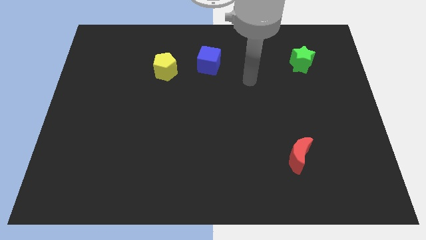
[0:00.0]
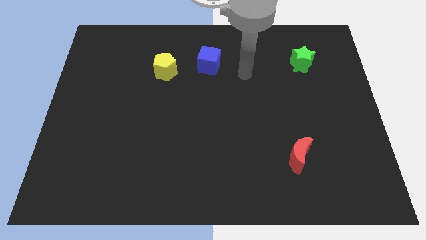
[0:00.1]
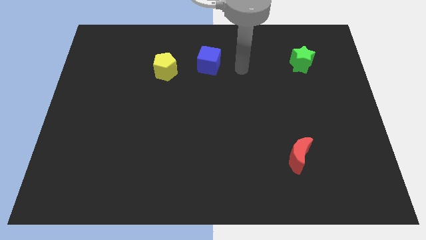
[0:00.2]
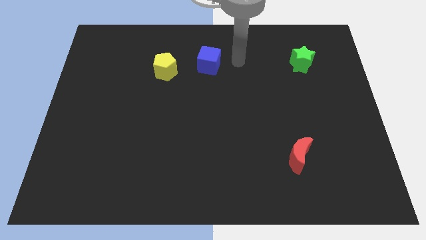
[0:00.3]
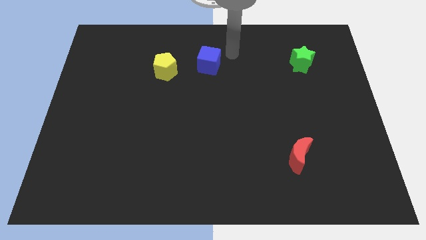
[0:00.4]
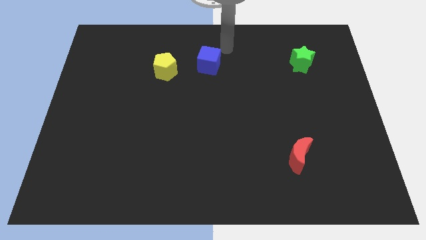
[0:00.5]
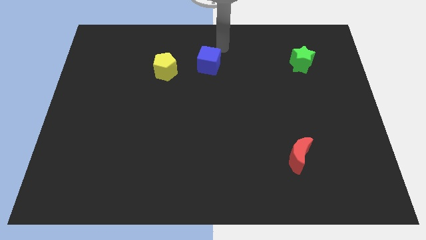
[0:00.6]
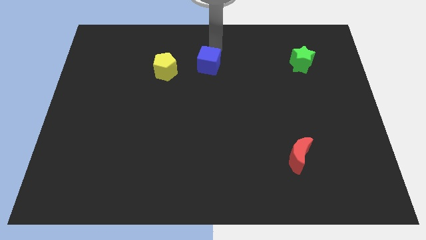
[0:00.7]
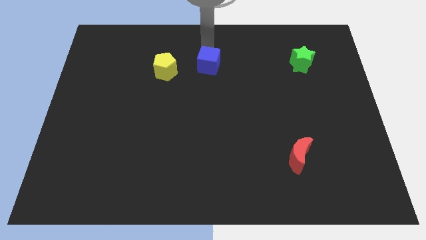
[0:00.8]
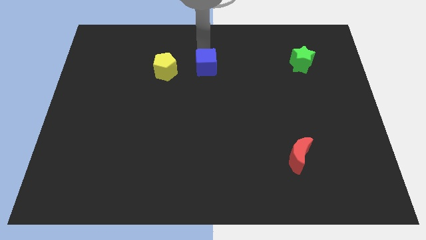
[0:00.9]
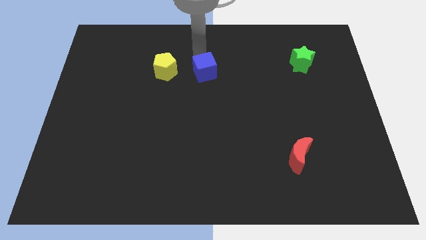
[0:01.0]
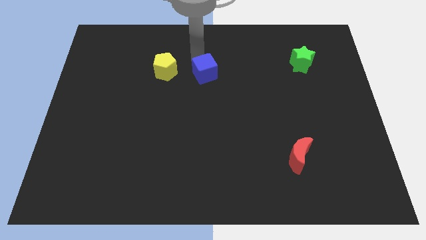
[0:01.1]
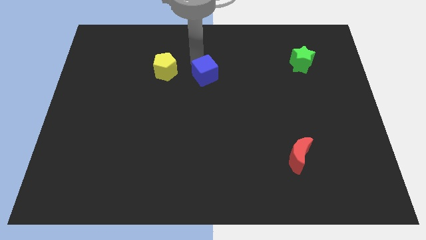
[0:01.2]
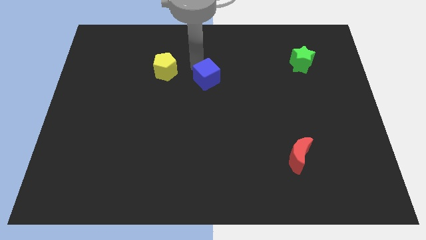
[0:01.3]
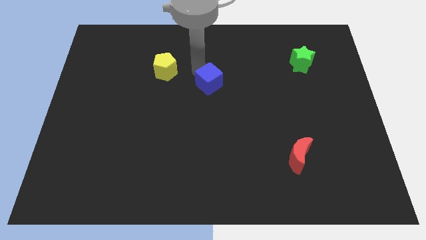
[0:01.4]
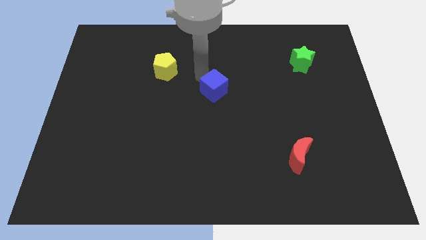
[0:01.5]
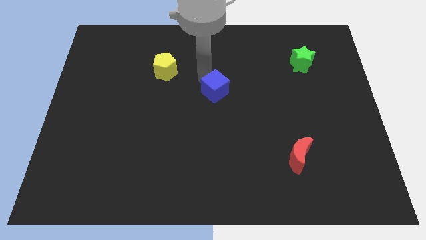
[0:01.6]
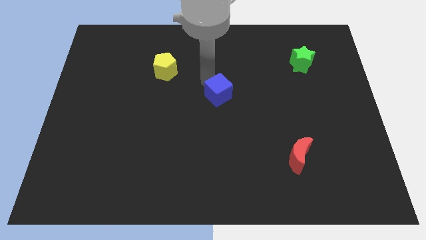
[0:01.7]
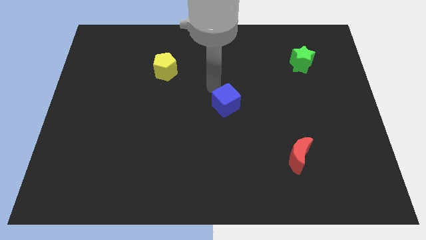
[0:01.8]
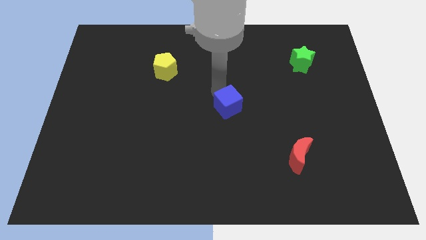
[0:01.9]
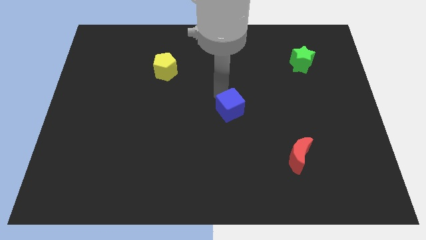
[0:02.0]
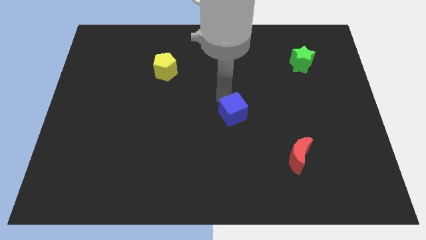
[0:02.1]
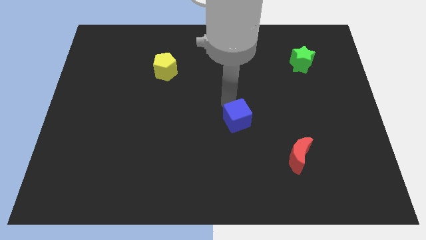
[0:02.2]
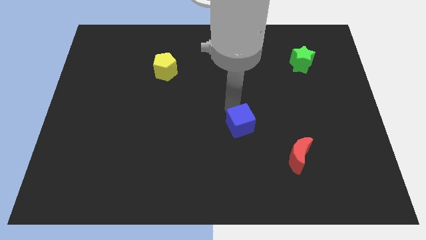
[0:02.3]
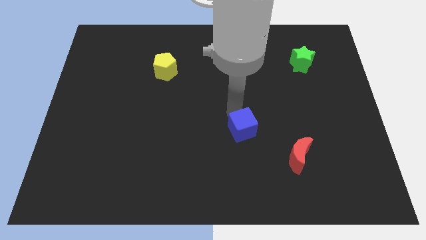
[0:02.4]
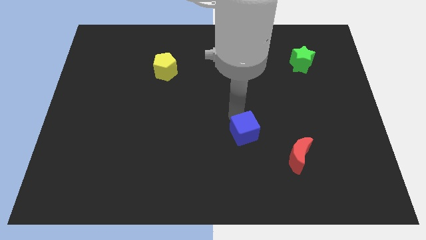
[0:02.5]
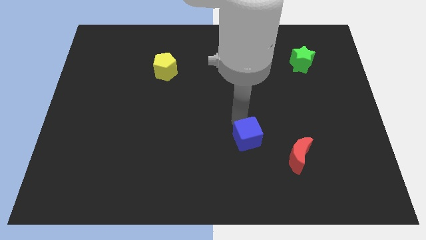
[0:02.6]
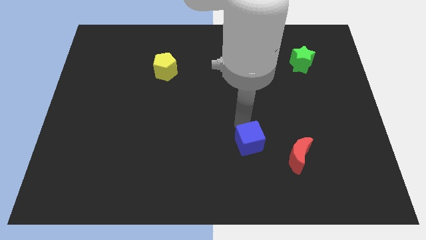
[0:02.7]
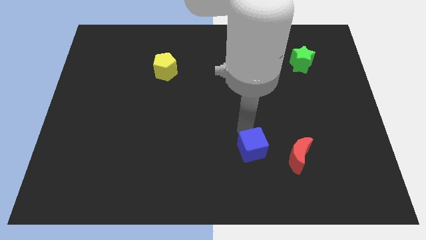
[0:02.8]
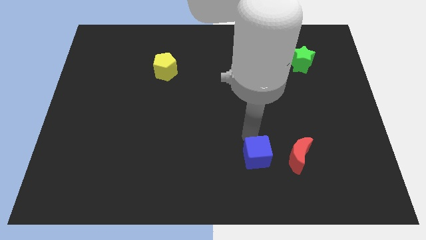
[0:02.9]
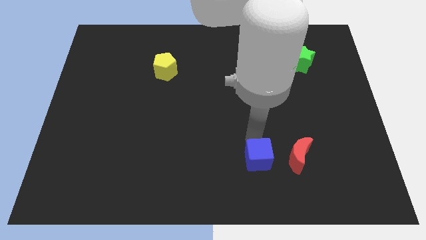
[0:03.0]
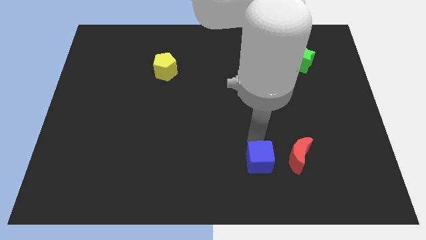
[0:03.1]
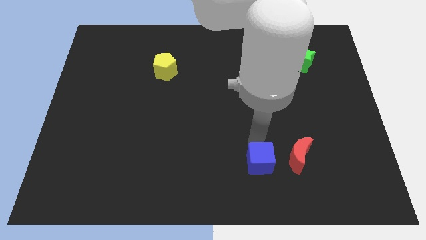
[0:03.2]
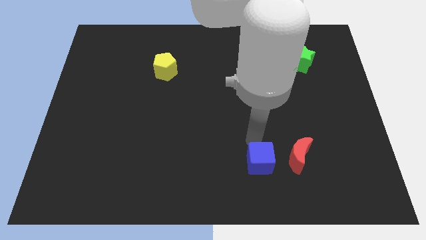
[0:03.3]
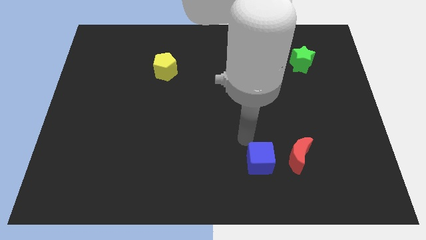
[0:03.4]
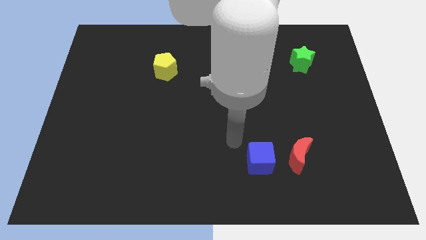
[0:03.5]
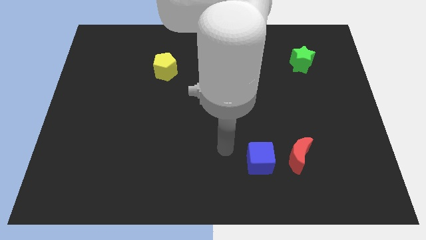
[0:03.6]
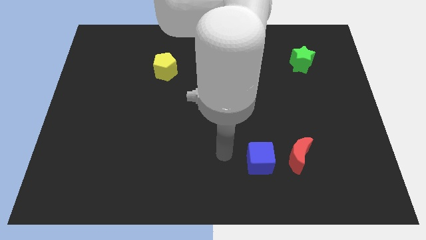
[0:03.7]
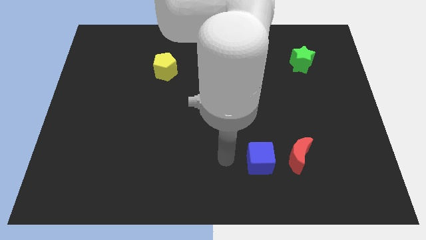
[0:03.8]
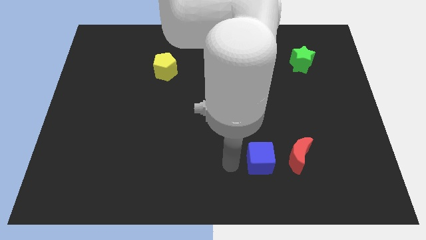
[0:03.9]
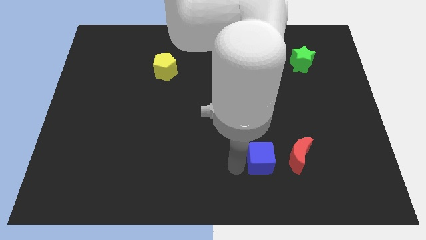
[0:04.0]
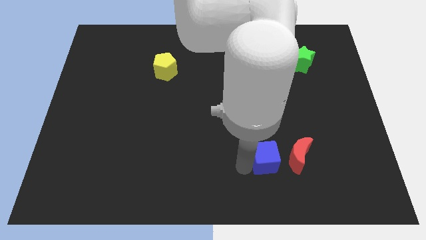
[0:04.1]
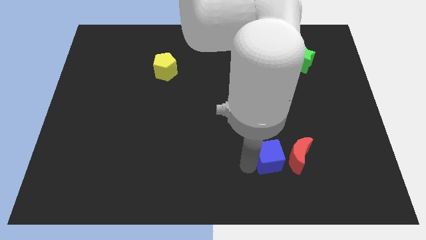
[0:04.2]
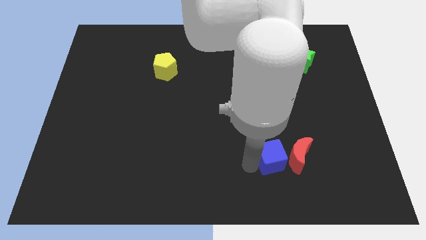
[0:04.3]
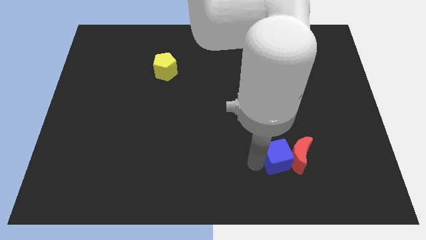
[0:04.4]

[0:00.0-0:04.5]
push the blue block next to the red block

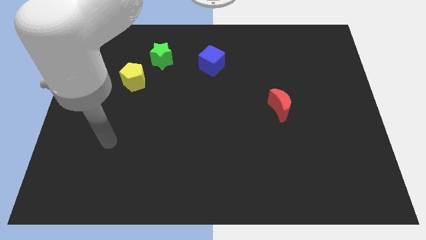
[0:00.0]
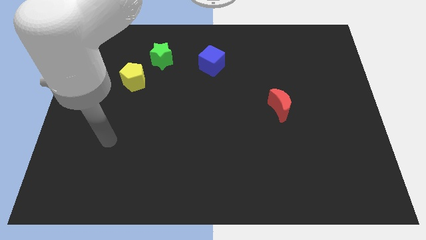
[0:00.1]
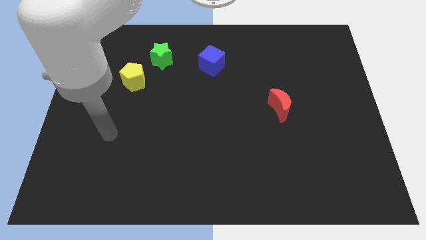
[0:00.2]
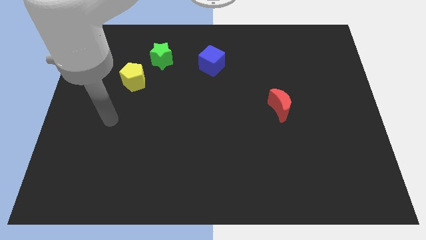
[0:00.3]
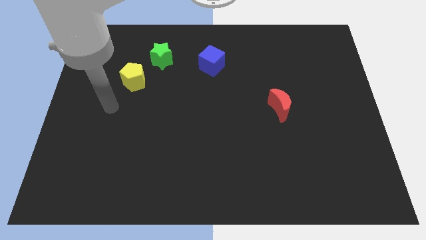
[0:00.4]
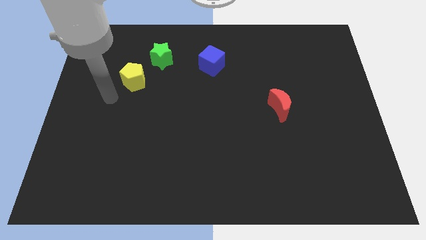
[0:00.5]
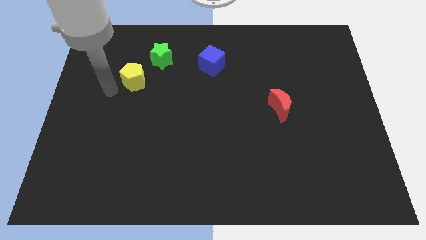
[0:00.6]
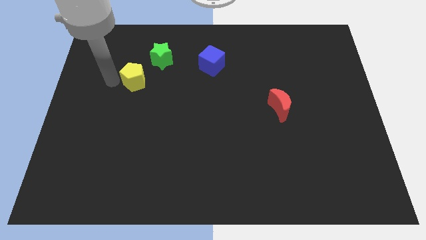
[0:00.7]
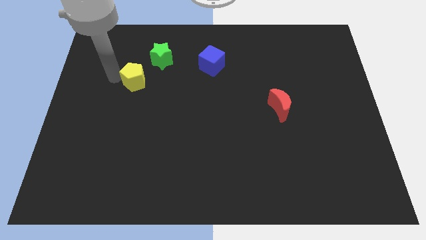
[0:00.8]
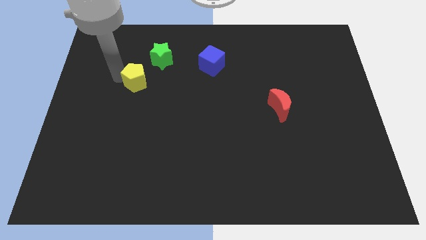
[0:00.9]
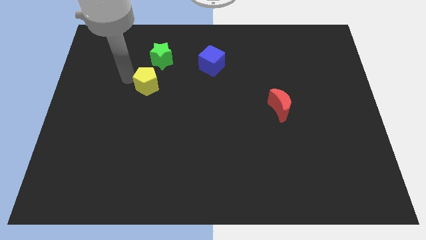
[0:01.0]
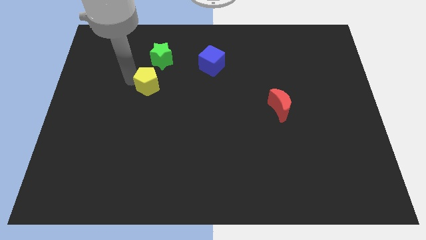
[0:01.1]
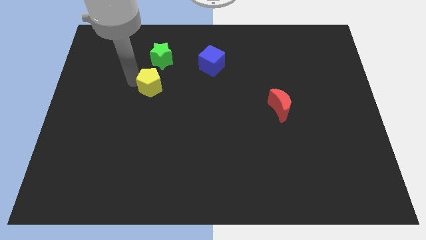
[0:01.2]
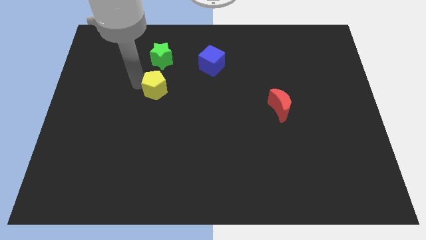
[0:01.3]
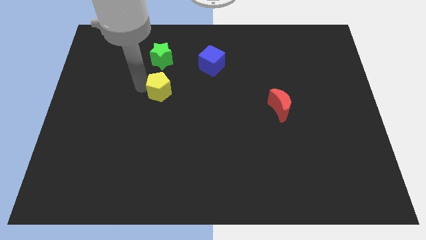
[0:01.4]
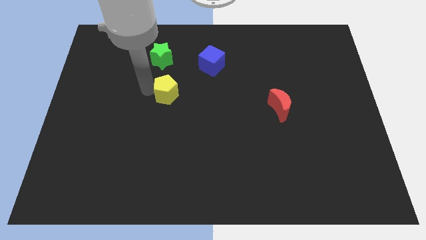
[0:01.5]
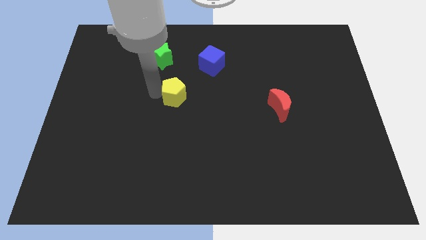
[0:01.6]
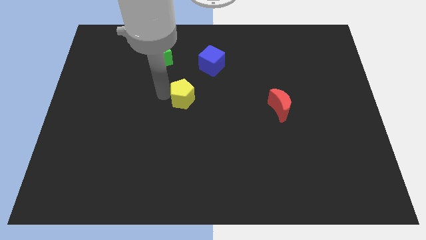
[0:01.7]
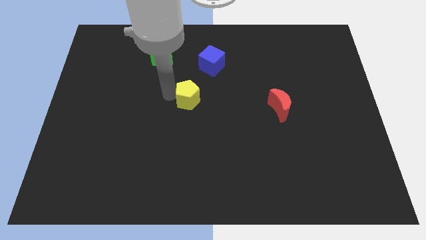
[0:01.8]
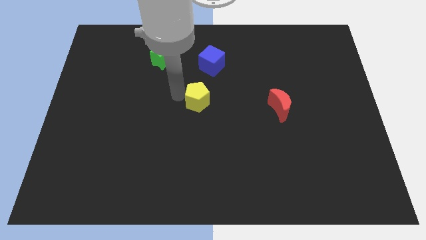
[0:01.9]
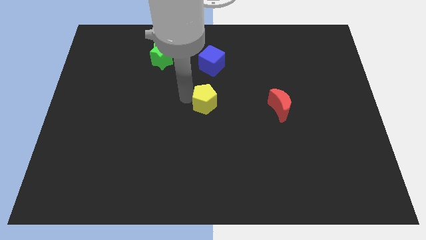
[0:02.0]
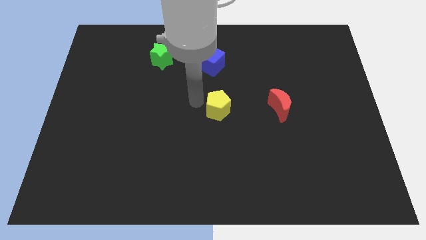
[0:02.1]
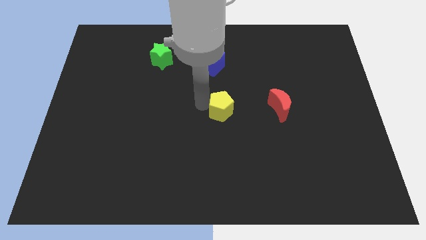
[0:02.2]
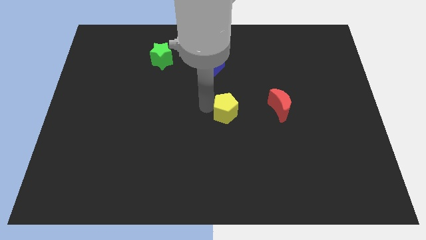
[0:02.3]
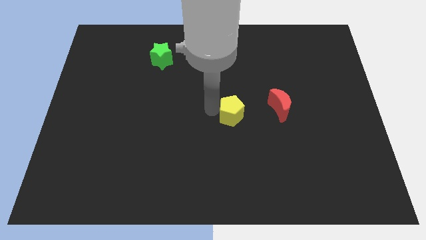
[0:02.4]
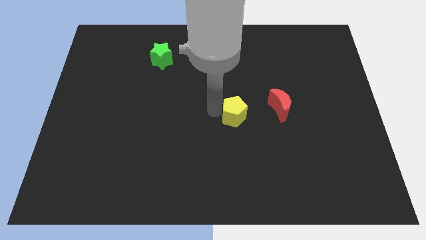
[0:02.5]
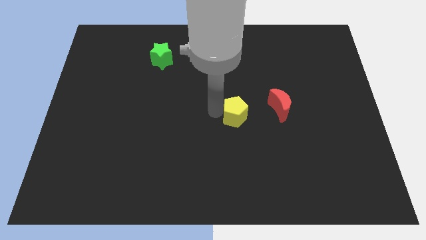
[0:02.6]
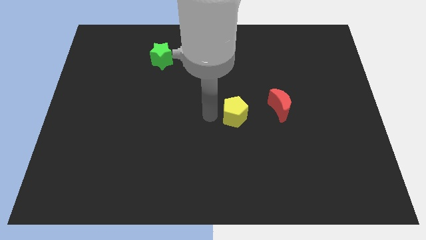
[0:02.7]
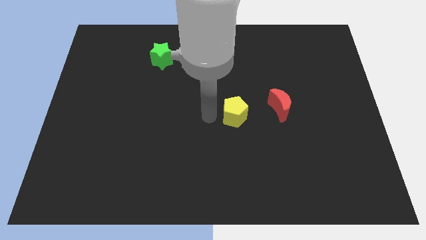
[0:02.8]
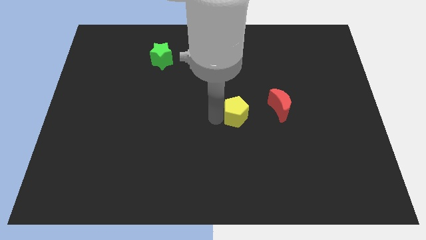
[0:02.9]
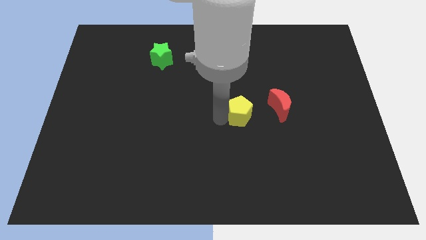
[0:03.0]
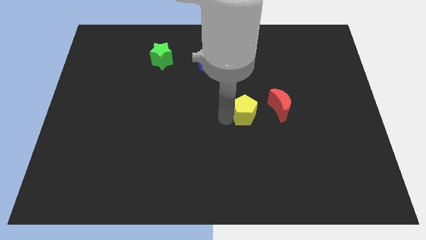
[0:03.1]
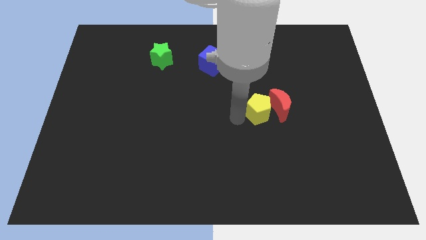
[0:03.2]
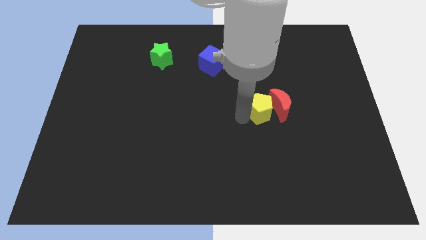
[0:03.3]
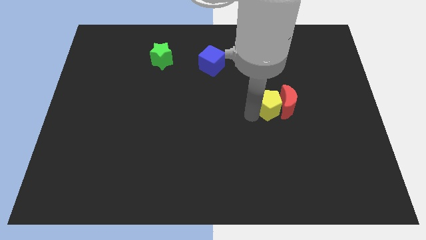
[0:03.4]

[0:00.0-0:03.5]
push the yellow pentagon close to the red block

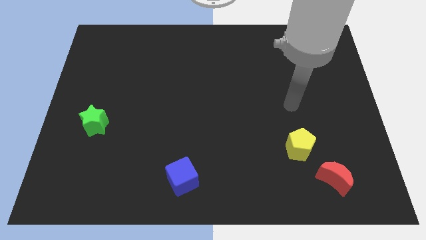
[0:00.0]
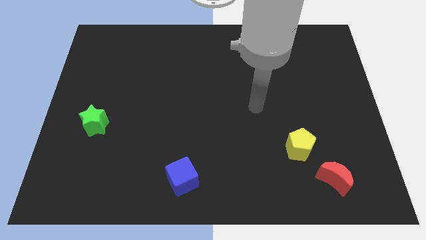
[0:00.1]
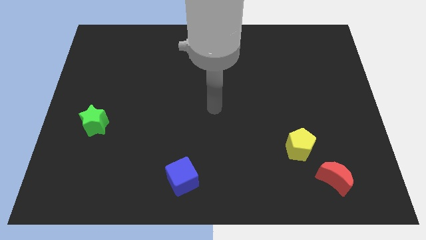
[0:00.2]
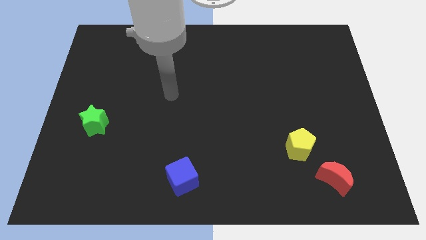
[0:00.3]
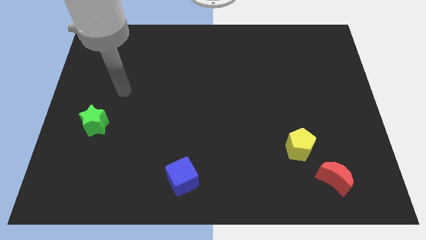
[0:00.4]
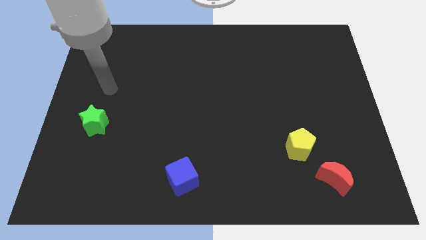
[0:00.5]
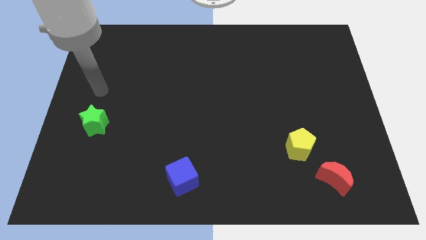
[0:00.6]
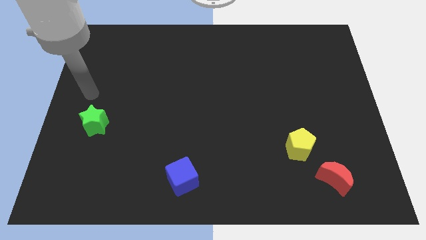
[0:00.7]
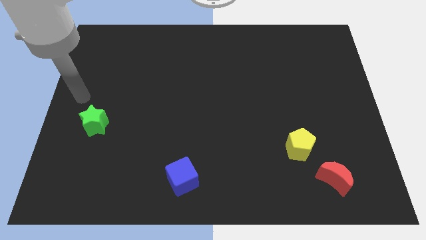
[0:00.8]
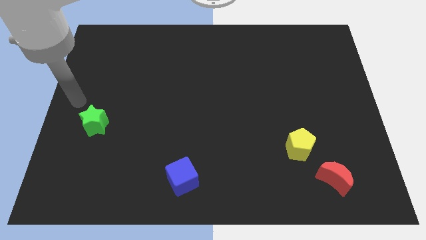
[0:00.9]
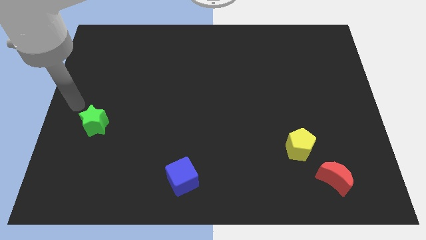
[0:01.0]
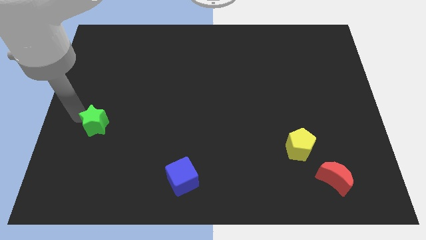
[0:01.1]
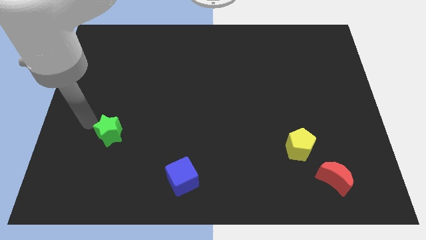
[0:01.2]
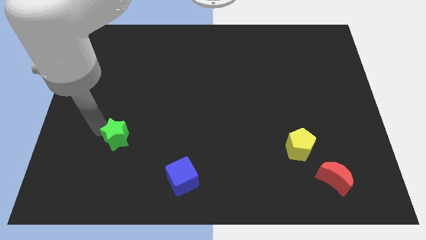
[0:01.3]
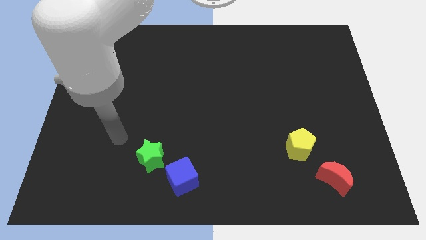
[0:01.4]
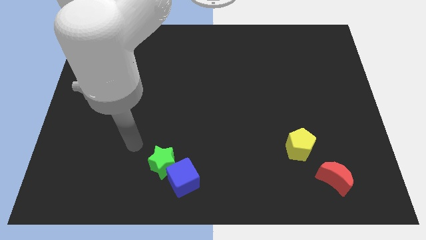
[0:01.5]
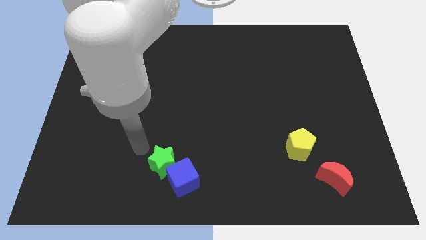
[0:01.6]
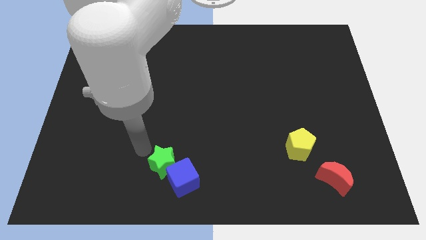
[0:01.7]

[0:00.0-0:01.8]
put the star next to the blue cube
